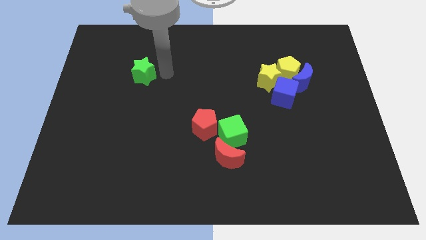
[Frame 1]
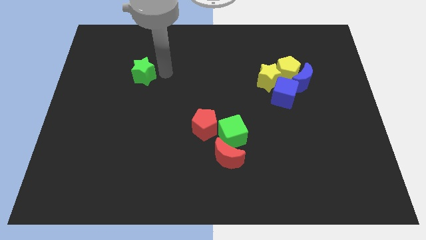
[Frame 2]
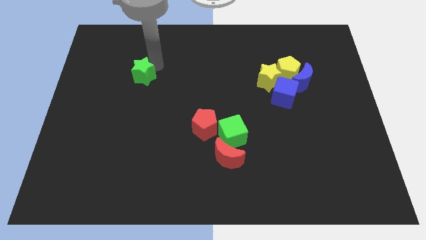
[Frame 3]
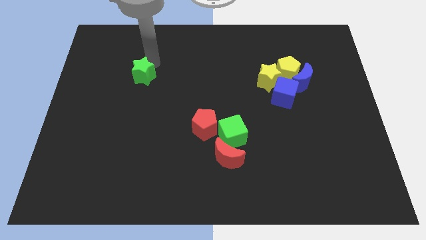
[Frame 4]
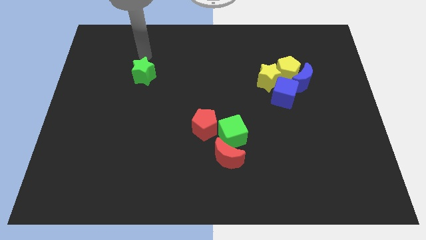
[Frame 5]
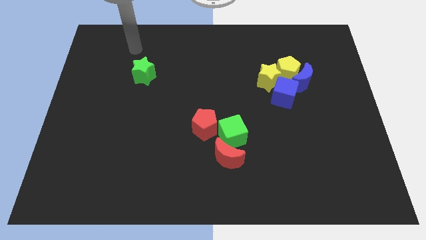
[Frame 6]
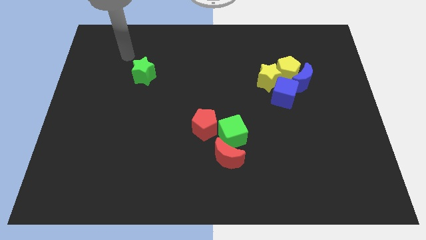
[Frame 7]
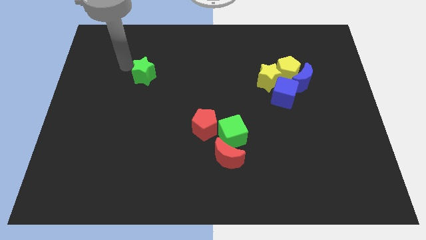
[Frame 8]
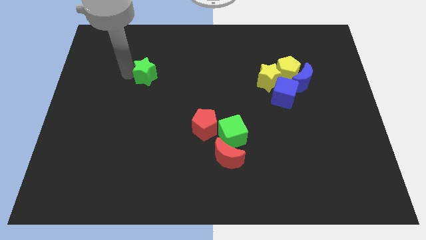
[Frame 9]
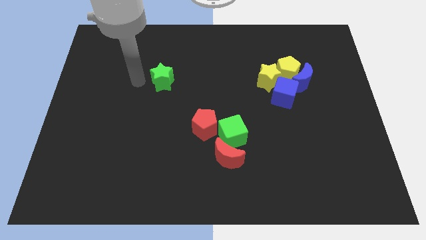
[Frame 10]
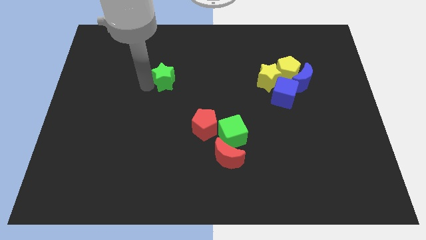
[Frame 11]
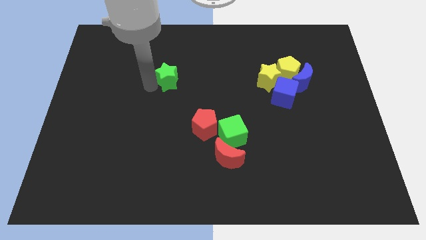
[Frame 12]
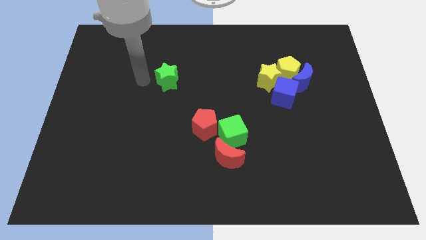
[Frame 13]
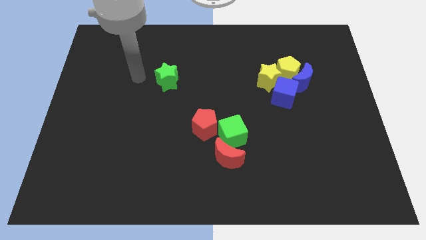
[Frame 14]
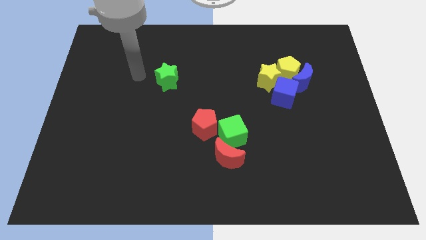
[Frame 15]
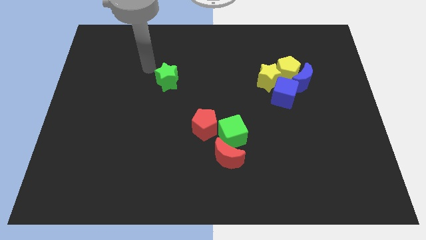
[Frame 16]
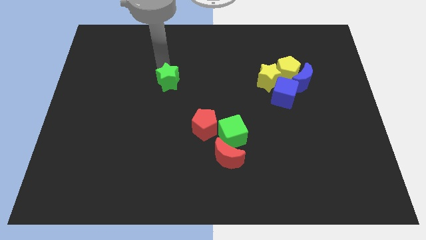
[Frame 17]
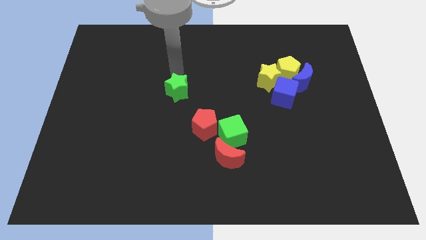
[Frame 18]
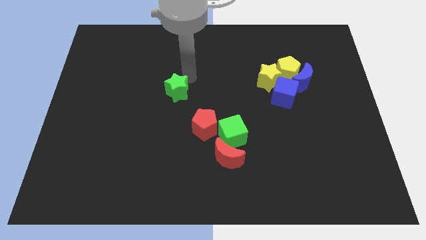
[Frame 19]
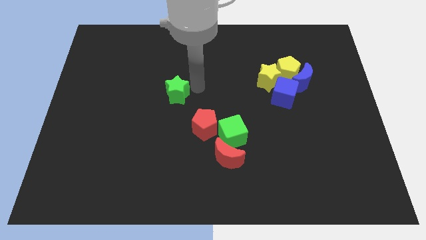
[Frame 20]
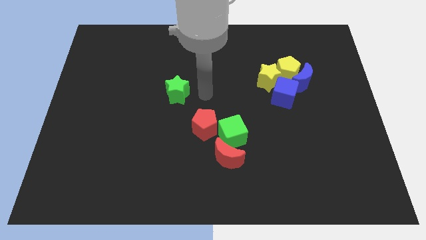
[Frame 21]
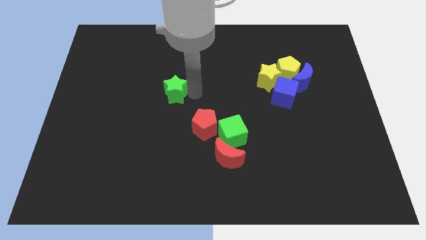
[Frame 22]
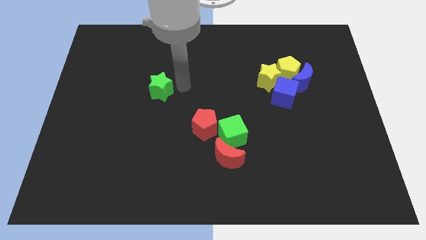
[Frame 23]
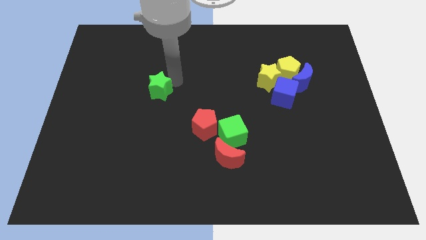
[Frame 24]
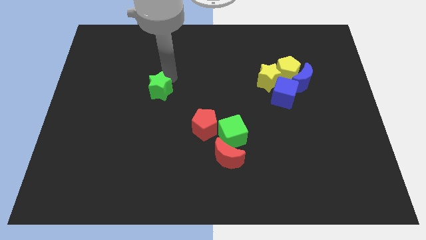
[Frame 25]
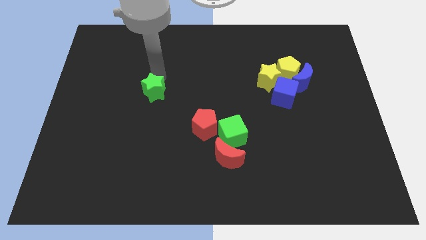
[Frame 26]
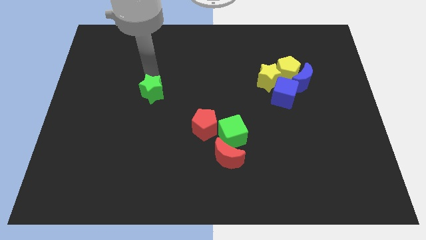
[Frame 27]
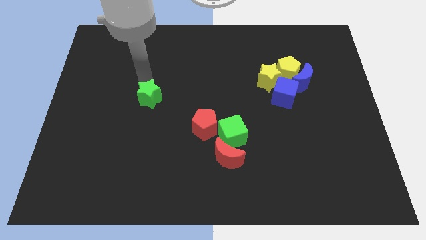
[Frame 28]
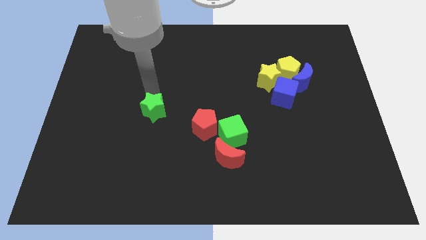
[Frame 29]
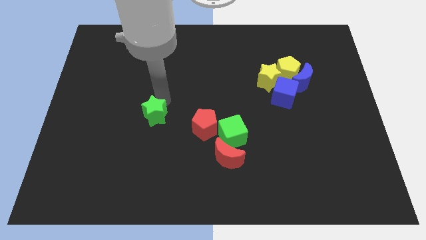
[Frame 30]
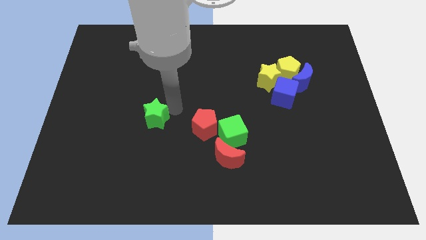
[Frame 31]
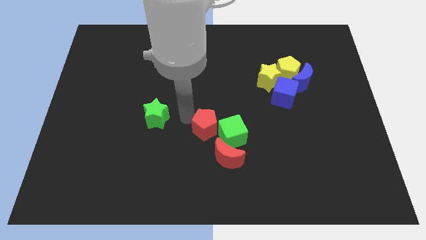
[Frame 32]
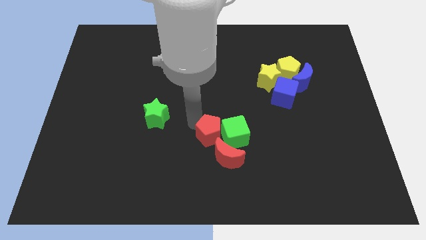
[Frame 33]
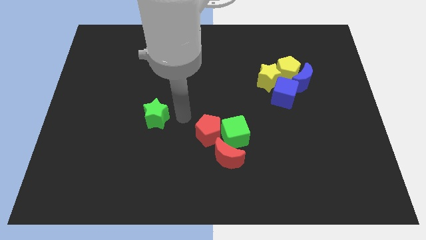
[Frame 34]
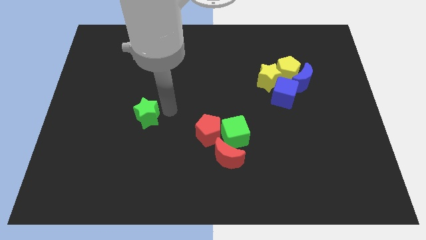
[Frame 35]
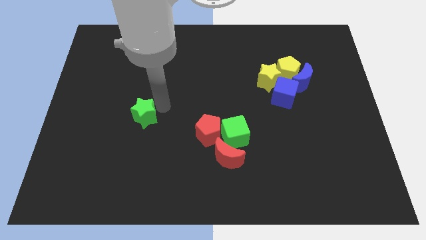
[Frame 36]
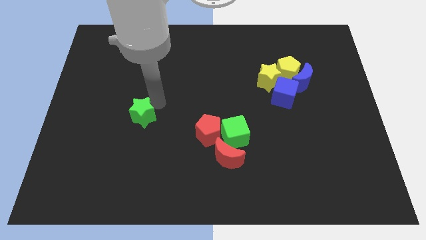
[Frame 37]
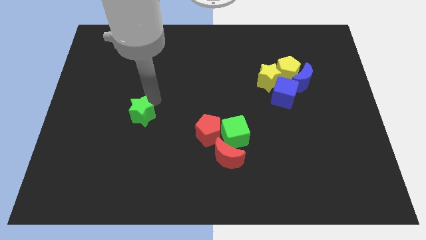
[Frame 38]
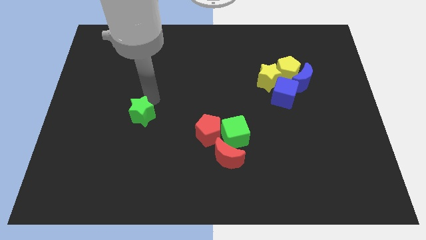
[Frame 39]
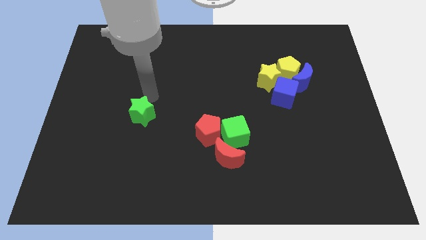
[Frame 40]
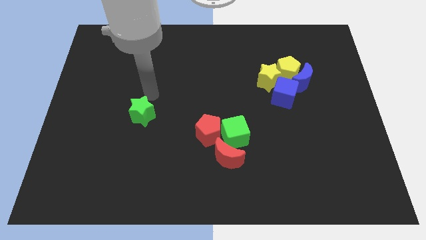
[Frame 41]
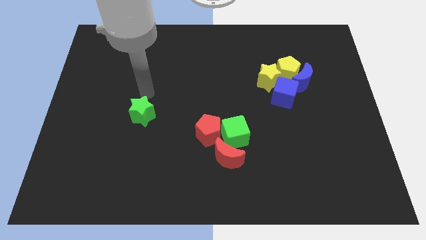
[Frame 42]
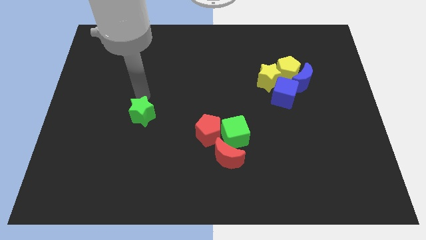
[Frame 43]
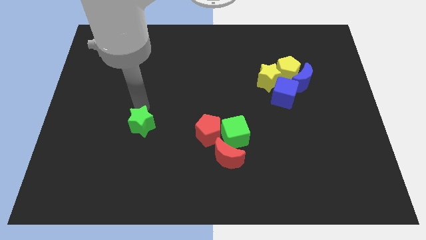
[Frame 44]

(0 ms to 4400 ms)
place the green star to the left of the red pentagon

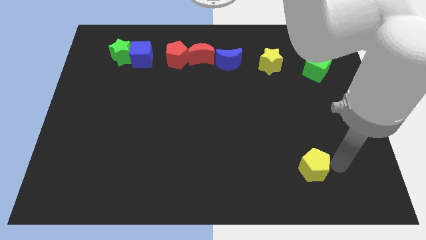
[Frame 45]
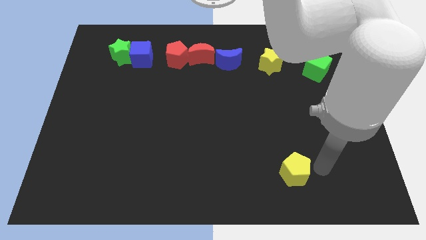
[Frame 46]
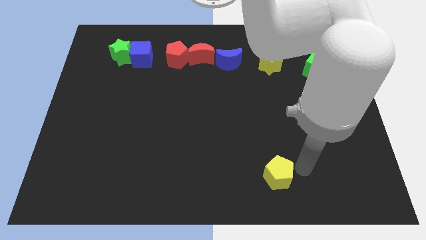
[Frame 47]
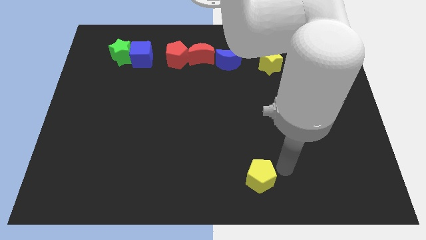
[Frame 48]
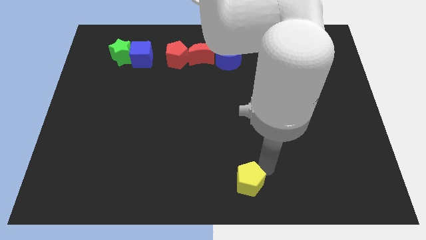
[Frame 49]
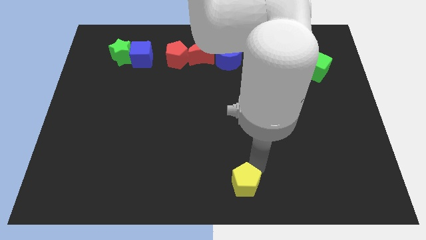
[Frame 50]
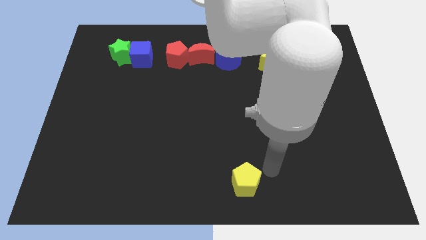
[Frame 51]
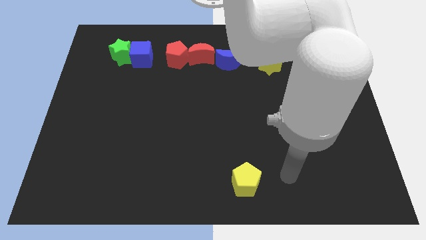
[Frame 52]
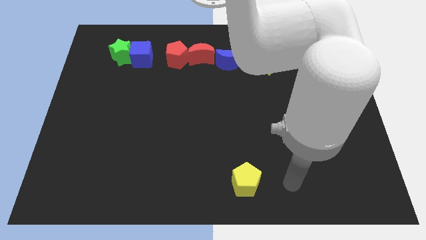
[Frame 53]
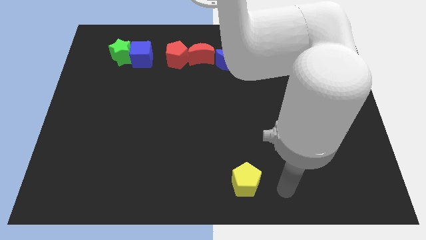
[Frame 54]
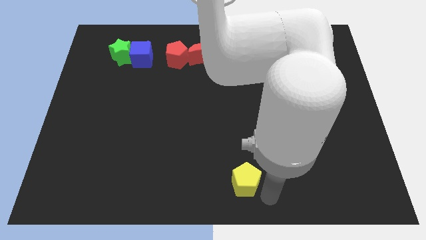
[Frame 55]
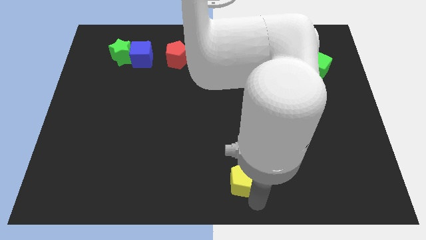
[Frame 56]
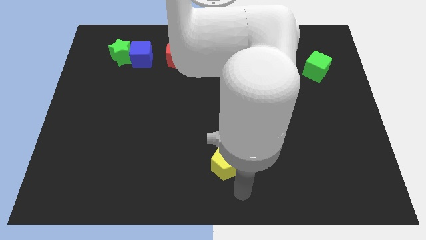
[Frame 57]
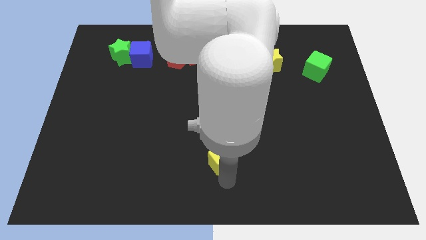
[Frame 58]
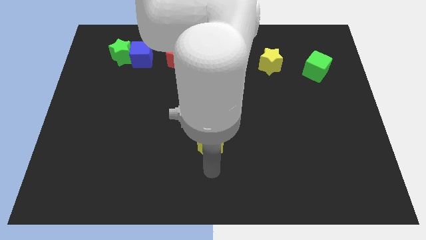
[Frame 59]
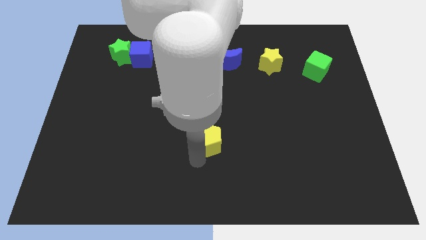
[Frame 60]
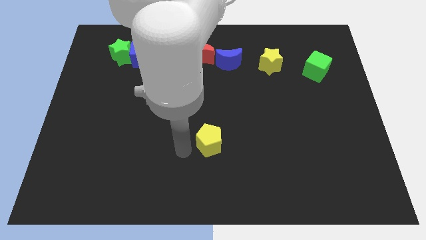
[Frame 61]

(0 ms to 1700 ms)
push the yellow pentagon towards the center of board

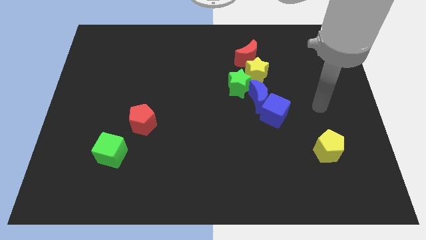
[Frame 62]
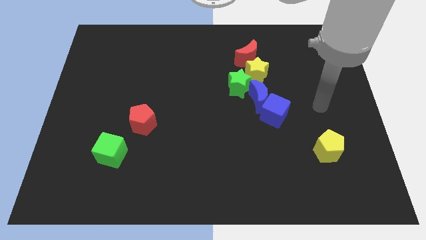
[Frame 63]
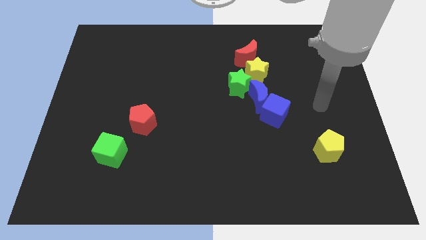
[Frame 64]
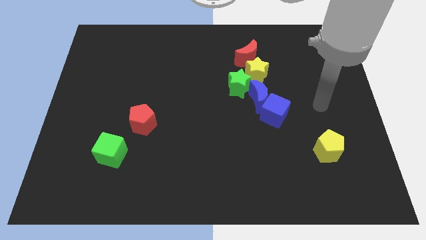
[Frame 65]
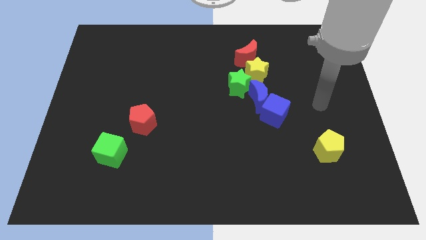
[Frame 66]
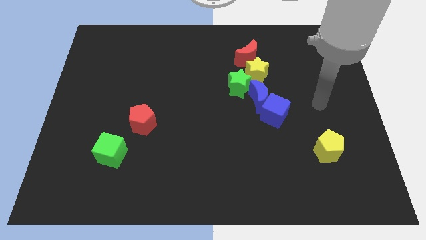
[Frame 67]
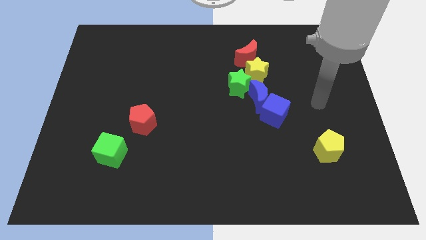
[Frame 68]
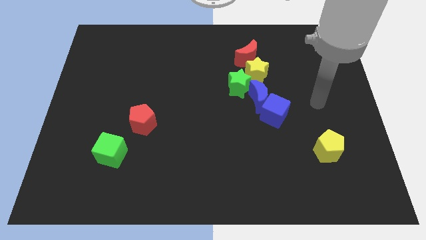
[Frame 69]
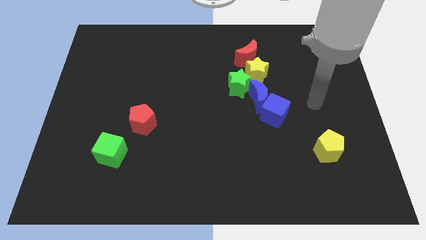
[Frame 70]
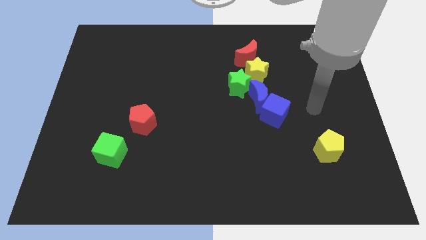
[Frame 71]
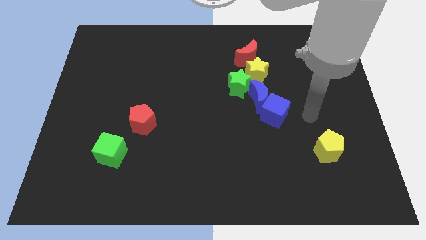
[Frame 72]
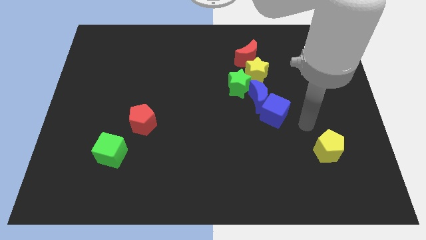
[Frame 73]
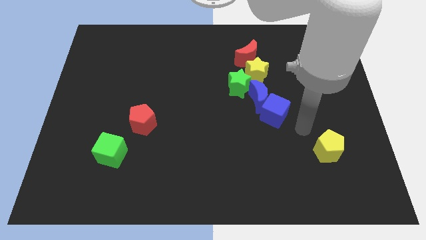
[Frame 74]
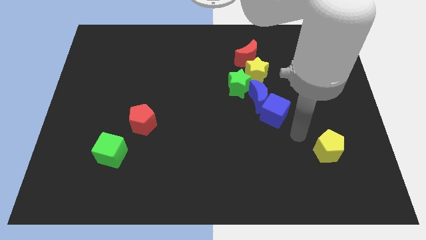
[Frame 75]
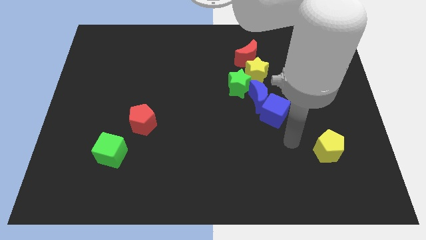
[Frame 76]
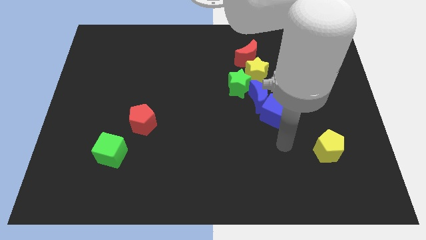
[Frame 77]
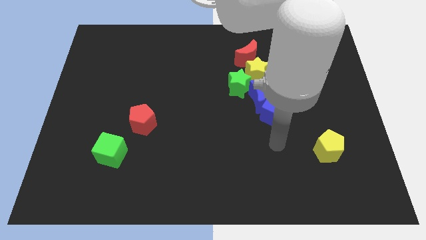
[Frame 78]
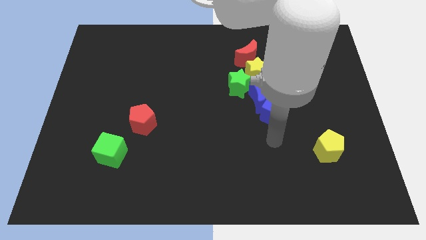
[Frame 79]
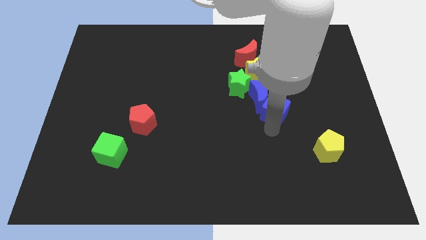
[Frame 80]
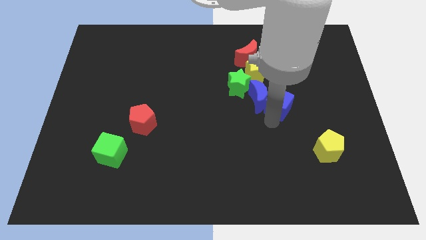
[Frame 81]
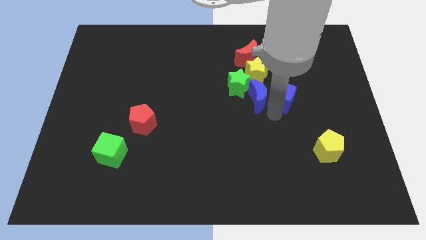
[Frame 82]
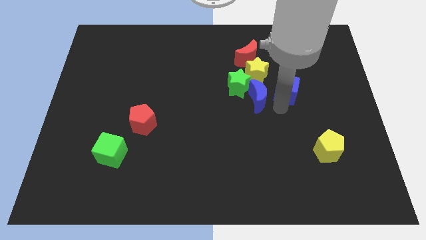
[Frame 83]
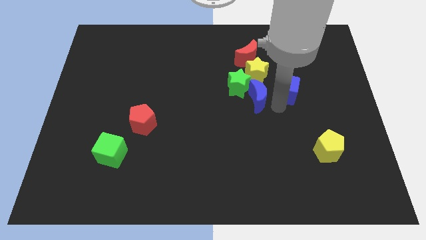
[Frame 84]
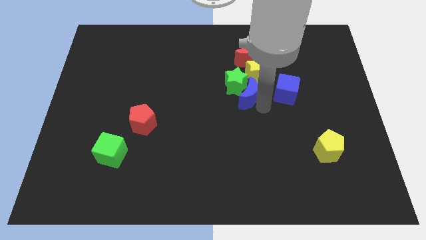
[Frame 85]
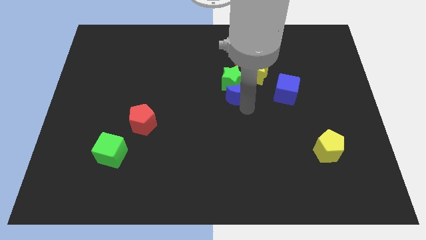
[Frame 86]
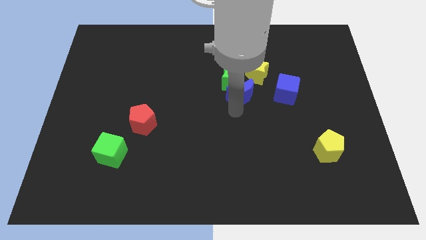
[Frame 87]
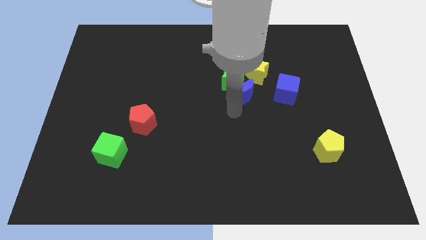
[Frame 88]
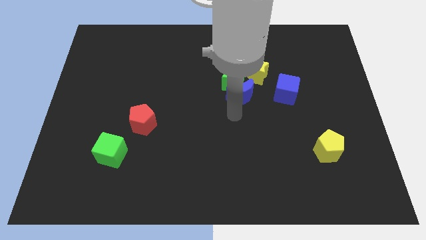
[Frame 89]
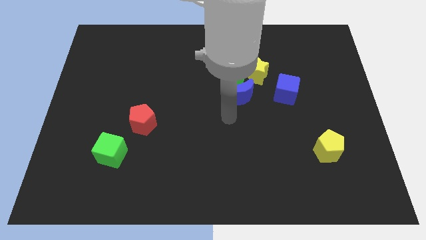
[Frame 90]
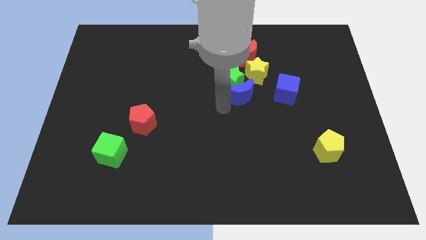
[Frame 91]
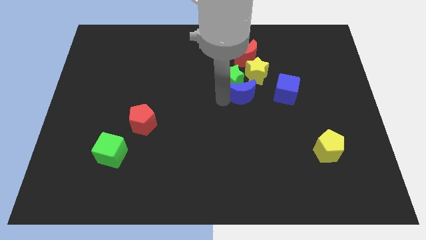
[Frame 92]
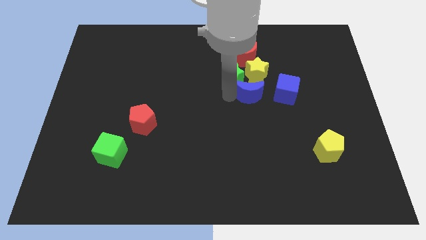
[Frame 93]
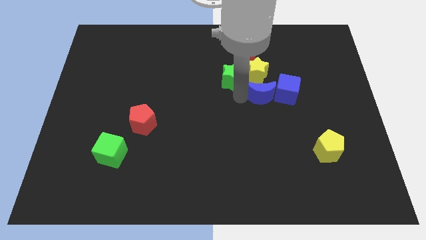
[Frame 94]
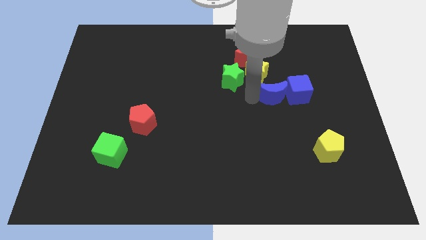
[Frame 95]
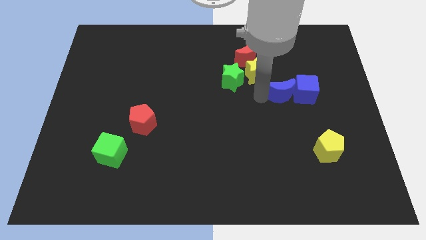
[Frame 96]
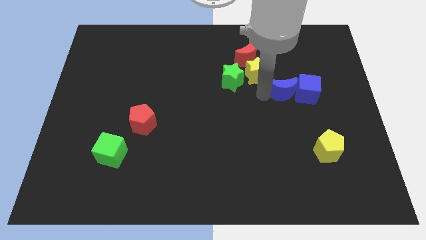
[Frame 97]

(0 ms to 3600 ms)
push both the blue blocks diagonally on the top left side of the yellow pentagon
